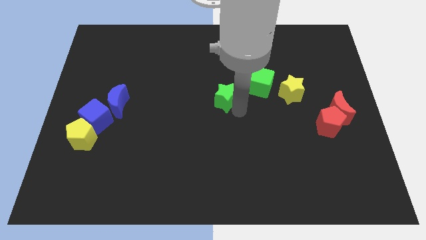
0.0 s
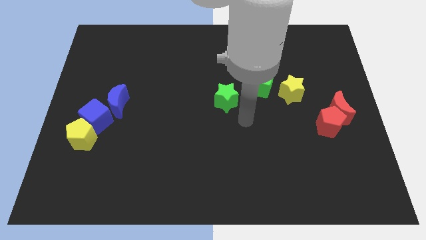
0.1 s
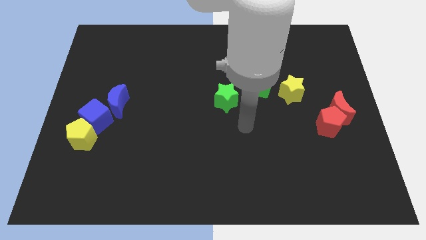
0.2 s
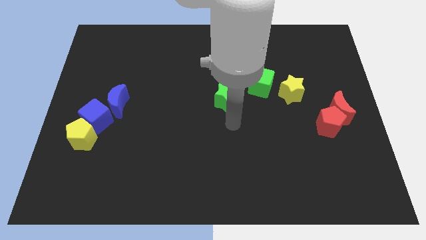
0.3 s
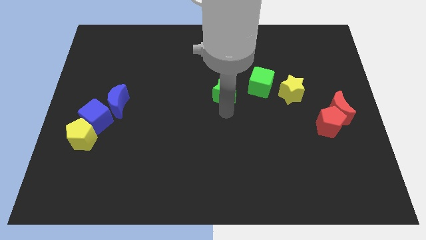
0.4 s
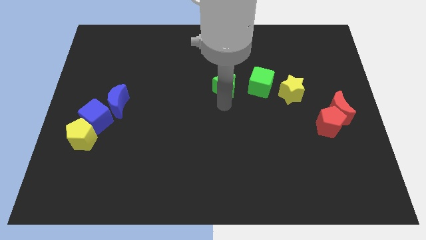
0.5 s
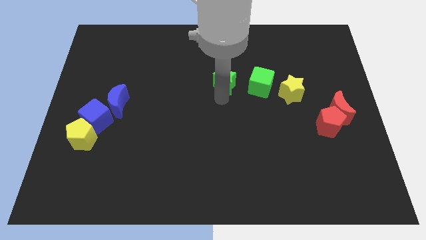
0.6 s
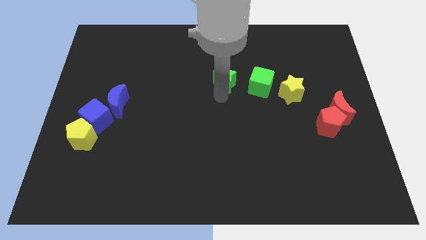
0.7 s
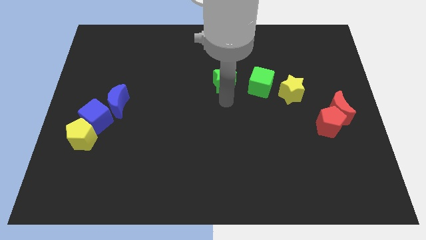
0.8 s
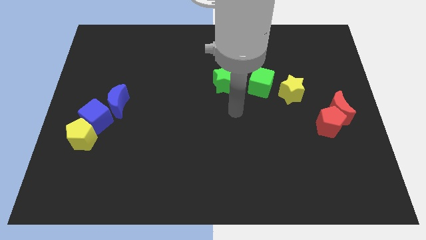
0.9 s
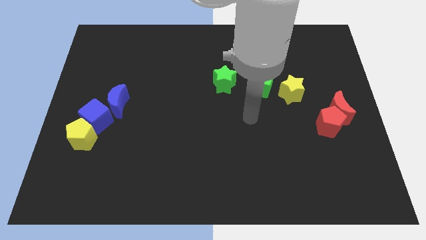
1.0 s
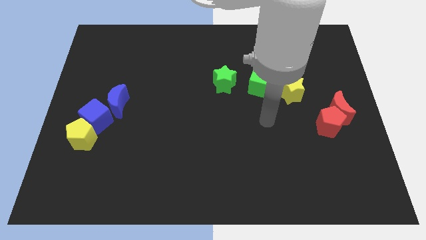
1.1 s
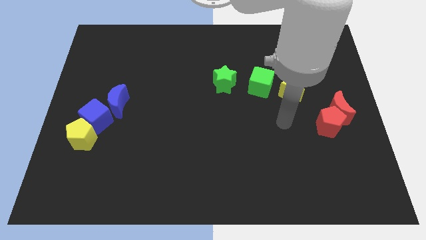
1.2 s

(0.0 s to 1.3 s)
move the green star to the left side of the green cube

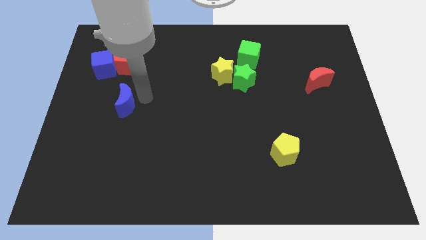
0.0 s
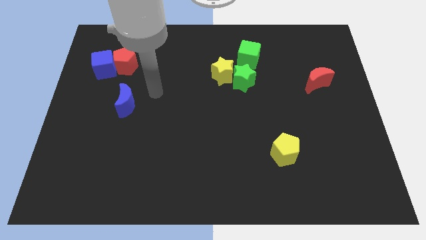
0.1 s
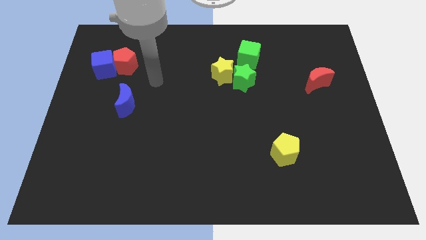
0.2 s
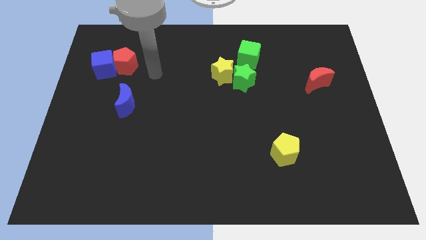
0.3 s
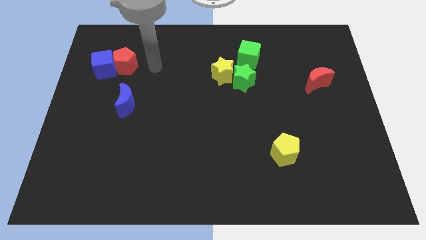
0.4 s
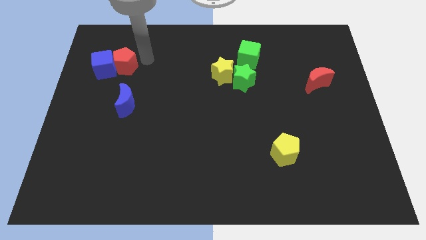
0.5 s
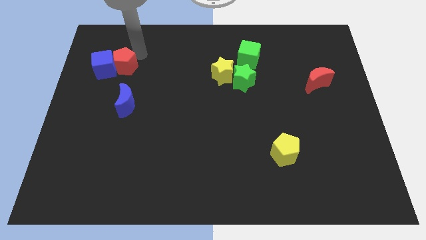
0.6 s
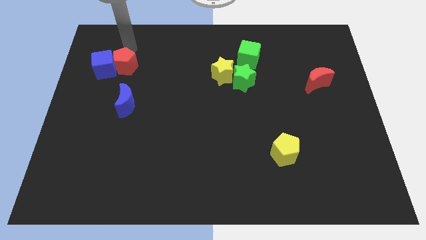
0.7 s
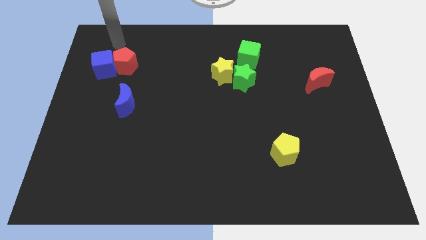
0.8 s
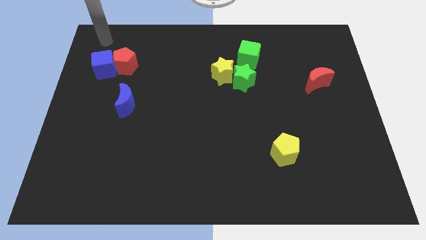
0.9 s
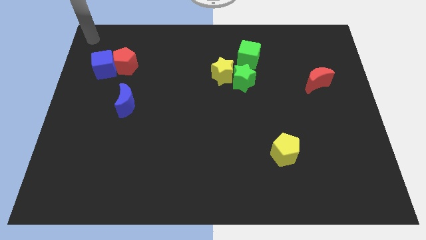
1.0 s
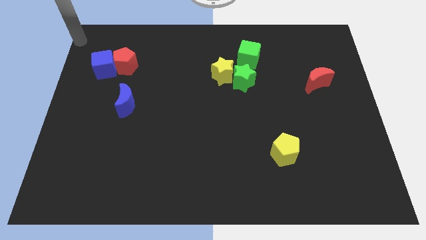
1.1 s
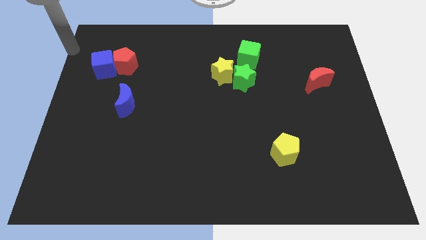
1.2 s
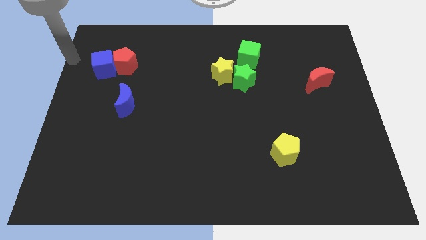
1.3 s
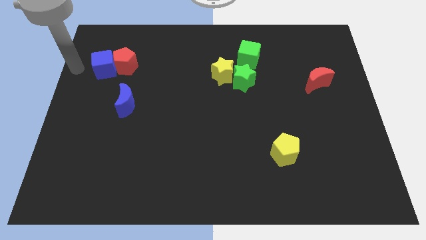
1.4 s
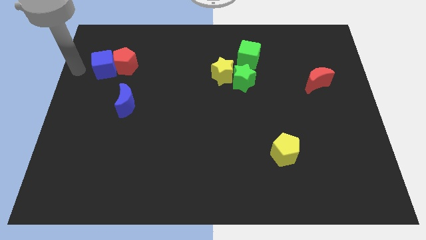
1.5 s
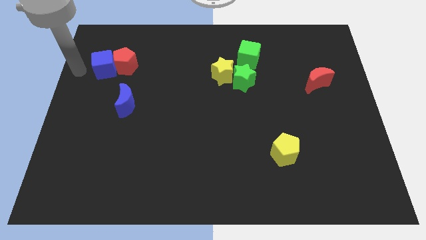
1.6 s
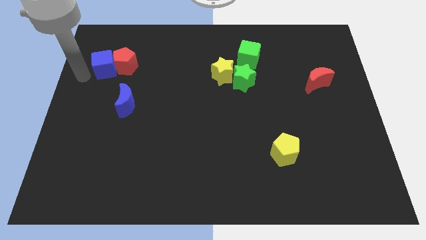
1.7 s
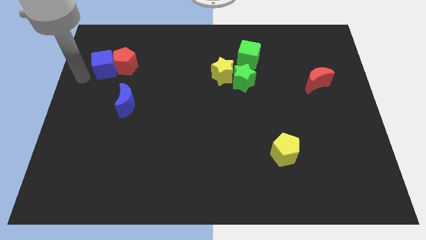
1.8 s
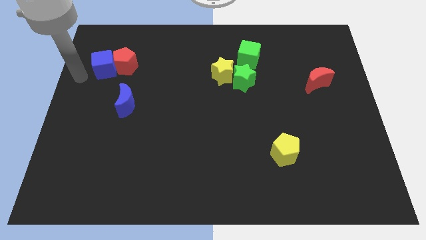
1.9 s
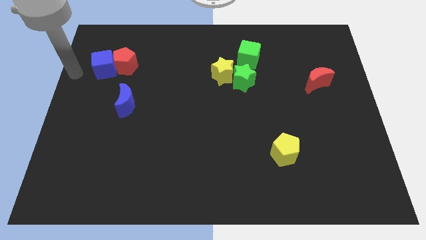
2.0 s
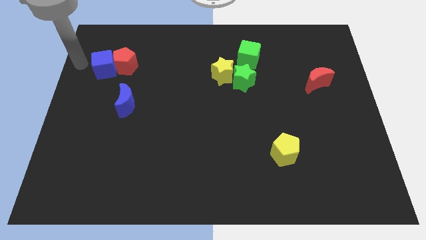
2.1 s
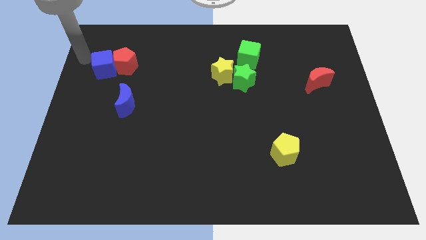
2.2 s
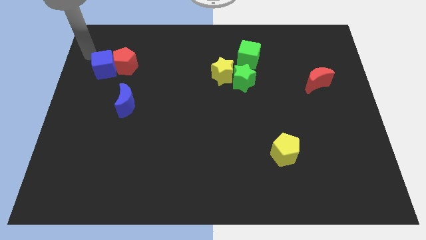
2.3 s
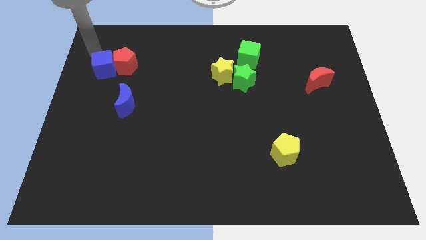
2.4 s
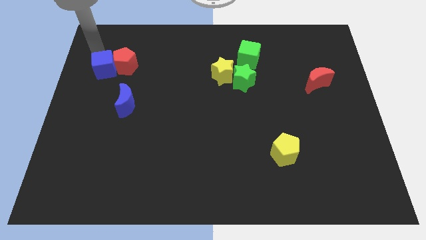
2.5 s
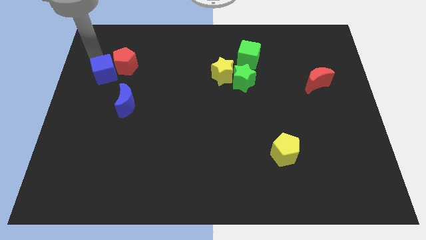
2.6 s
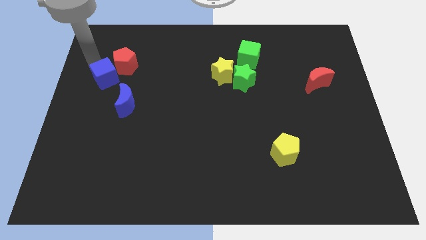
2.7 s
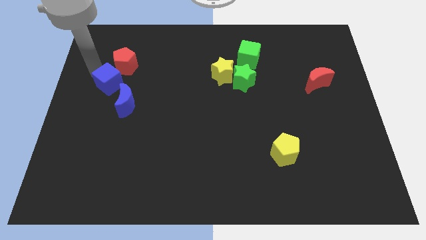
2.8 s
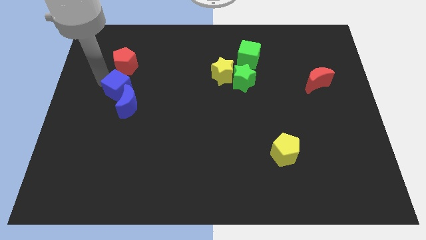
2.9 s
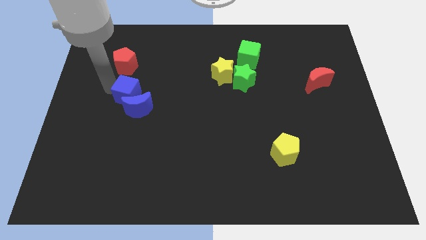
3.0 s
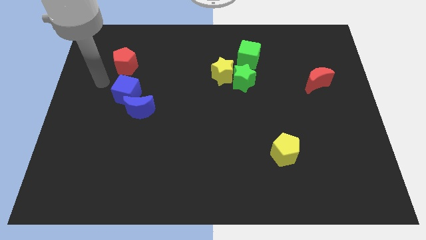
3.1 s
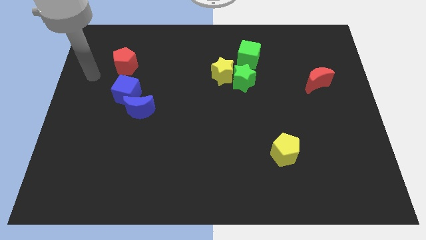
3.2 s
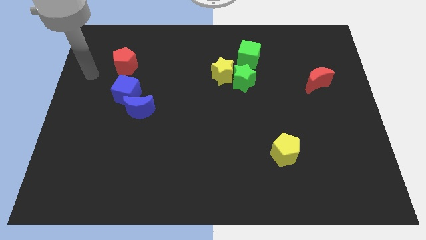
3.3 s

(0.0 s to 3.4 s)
place the blue cube in between the red pentagon and blue crescent

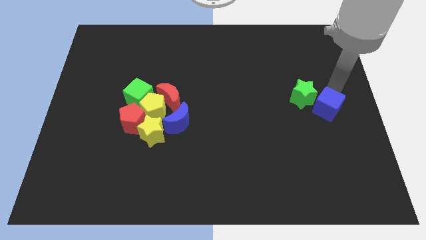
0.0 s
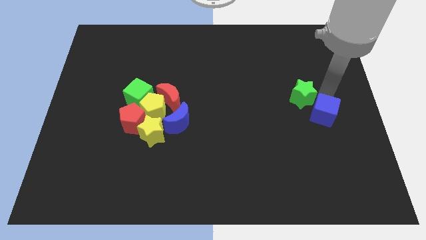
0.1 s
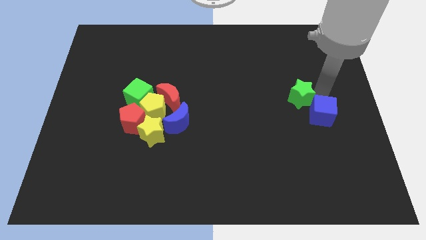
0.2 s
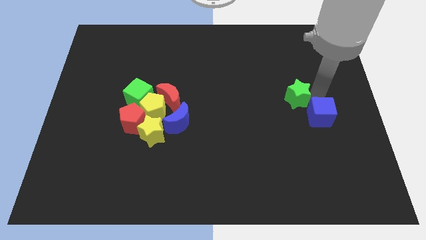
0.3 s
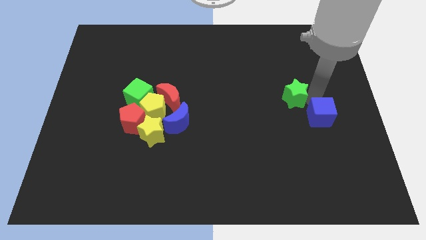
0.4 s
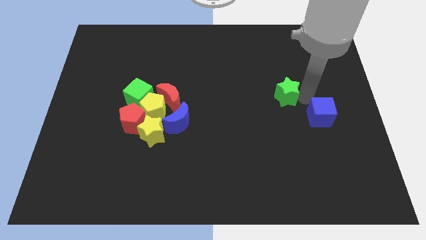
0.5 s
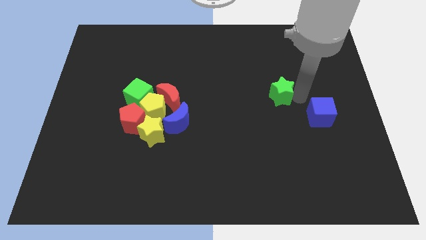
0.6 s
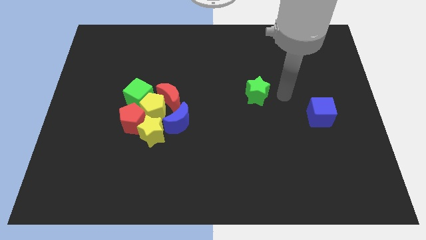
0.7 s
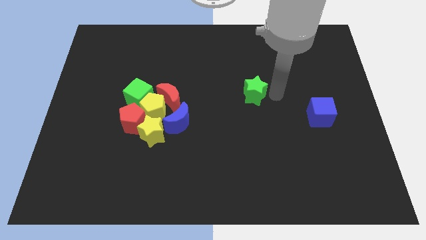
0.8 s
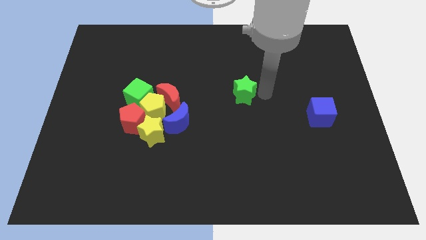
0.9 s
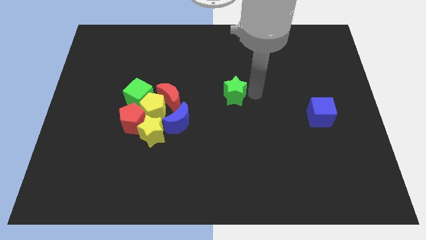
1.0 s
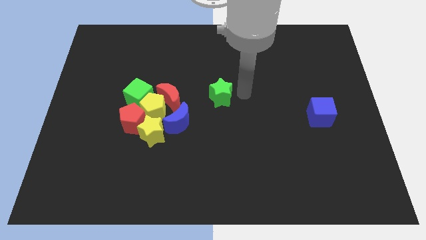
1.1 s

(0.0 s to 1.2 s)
separate the green star from the blue cube

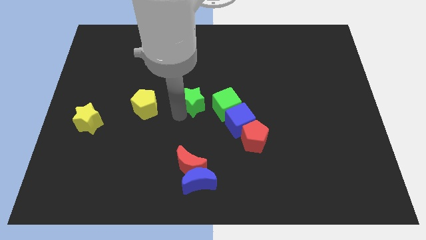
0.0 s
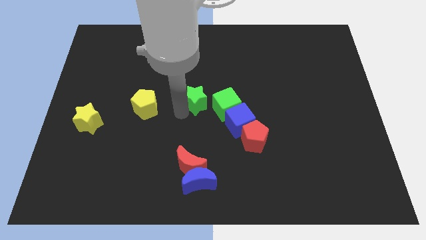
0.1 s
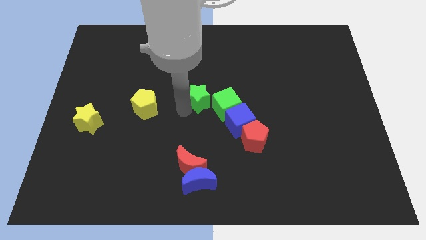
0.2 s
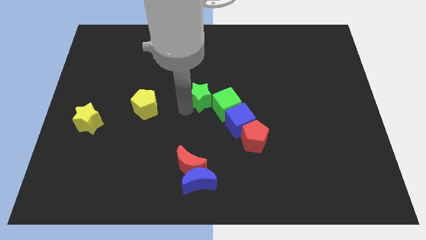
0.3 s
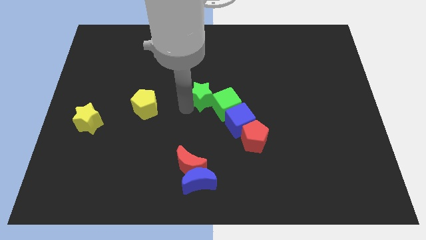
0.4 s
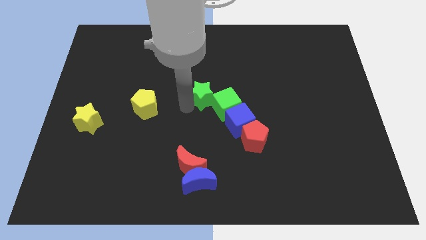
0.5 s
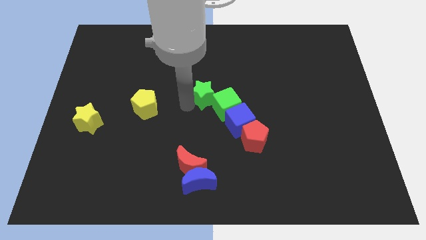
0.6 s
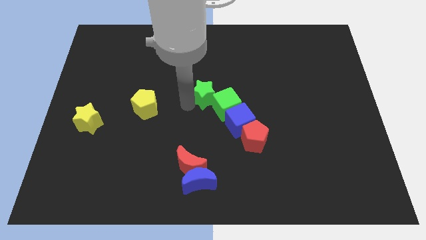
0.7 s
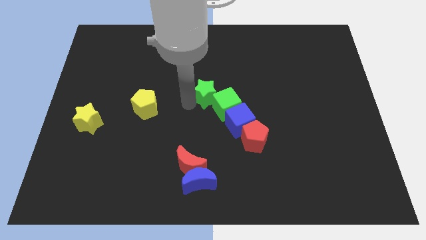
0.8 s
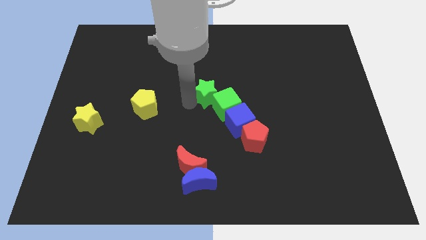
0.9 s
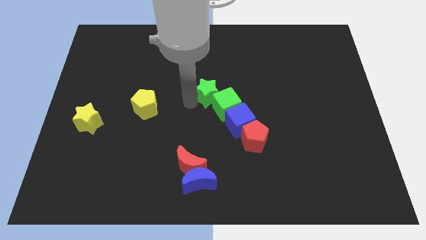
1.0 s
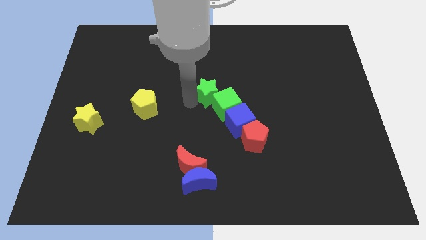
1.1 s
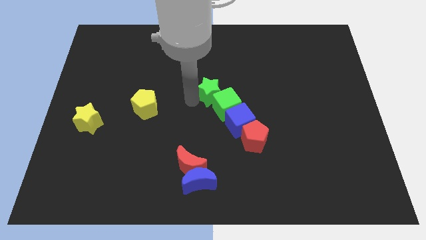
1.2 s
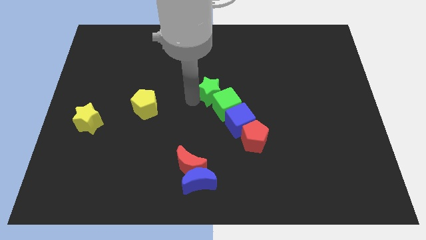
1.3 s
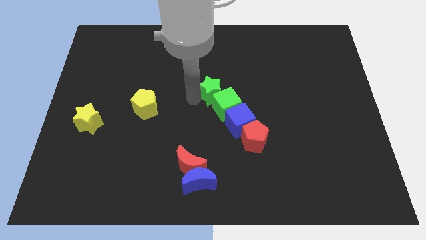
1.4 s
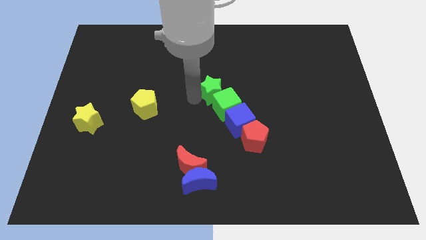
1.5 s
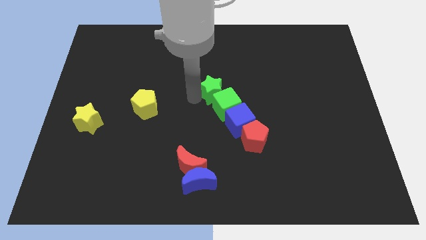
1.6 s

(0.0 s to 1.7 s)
place the green star on top of the green cube to form a diagnoal line

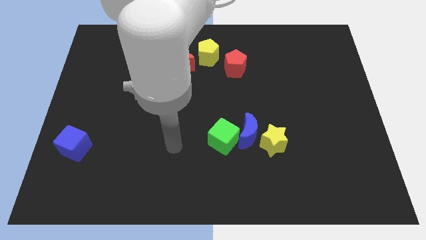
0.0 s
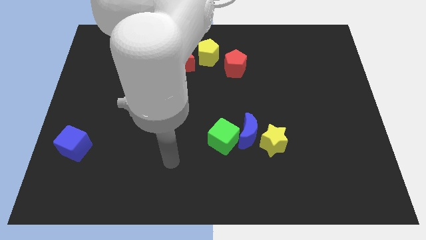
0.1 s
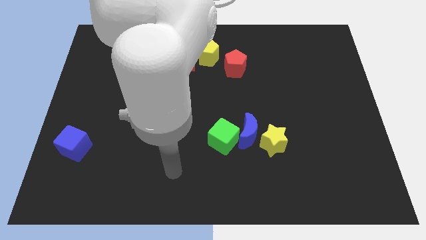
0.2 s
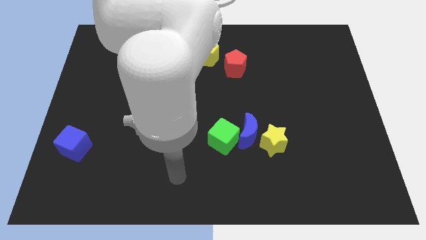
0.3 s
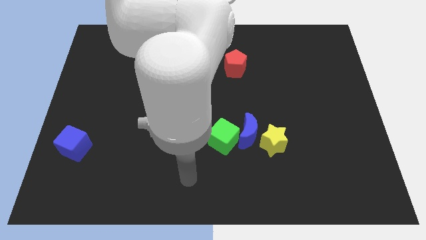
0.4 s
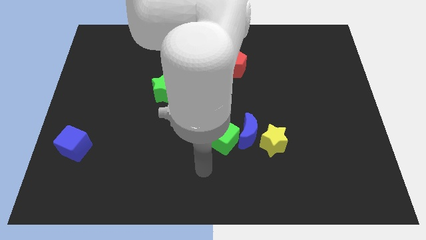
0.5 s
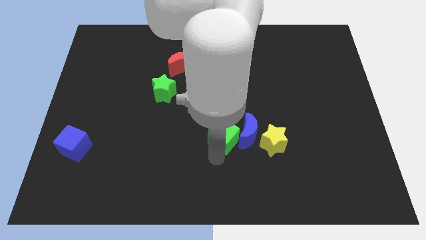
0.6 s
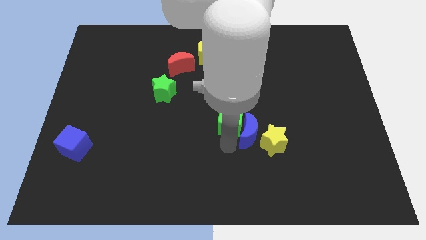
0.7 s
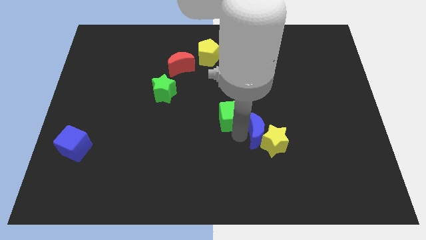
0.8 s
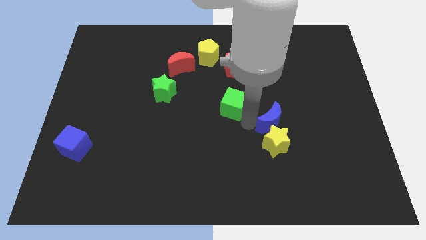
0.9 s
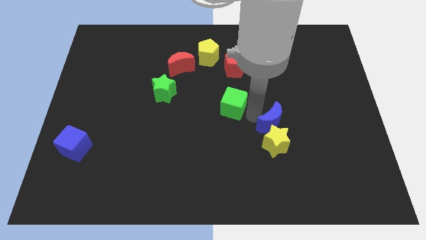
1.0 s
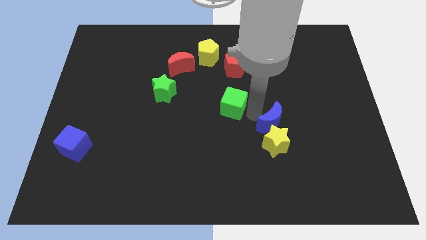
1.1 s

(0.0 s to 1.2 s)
separate the green cube and blue crescent from each other

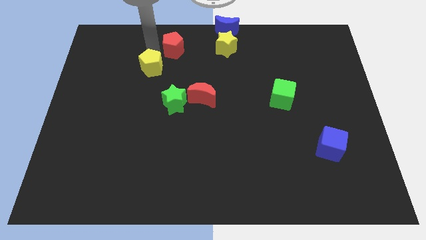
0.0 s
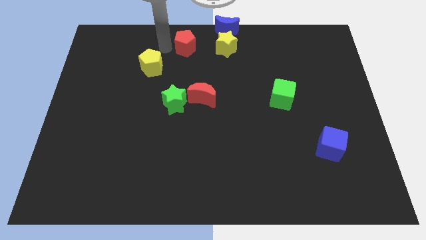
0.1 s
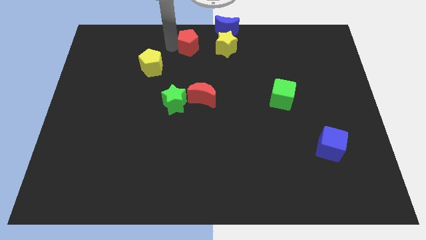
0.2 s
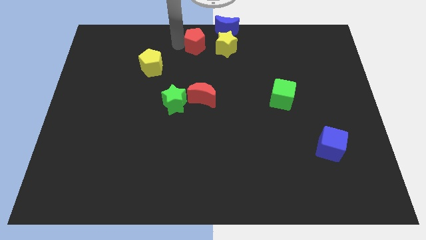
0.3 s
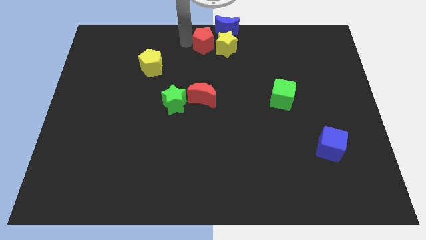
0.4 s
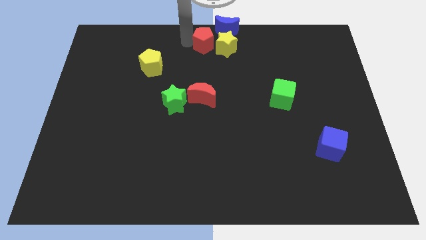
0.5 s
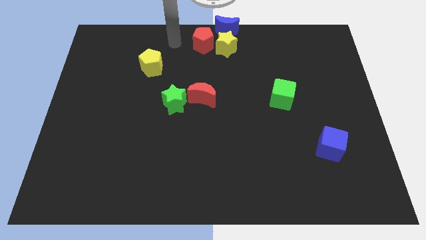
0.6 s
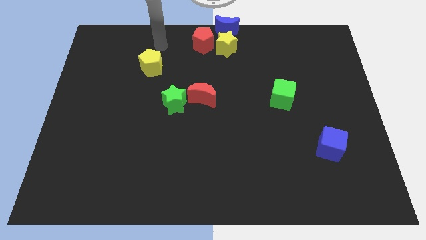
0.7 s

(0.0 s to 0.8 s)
move the red pentagon to the group of block
